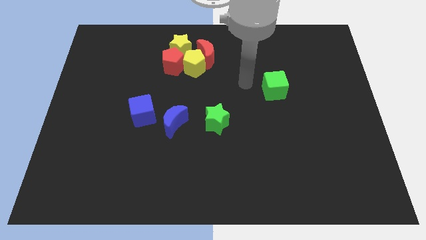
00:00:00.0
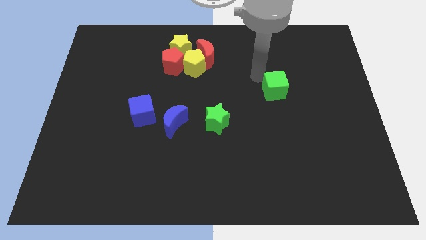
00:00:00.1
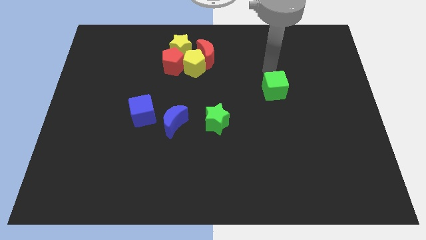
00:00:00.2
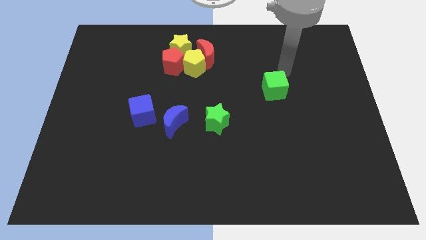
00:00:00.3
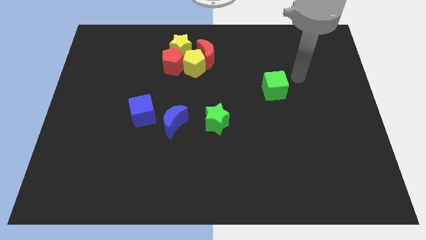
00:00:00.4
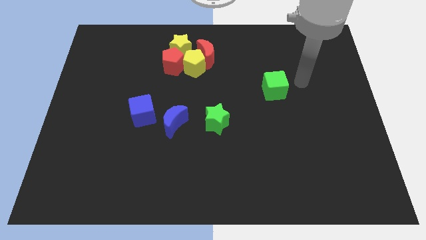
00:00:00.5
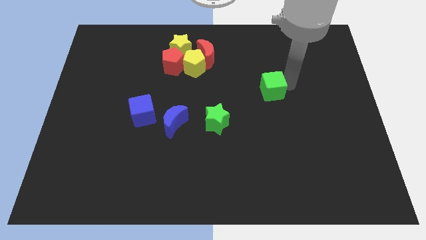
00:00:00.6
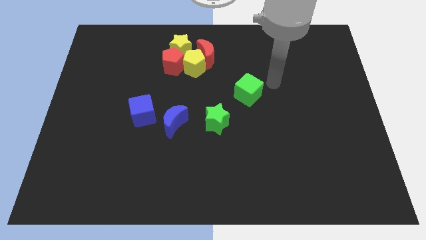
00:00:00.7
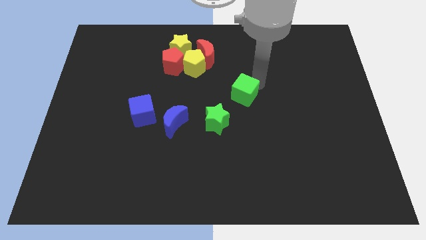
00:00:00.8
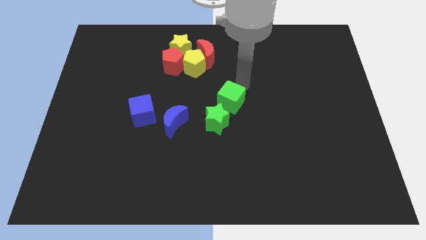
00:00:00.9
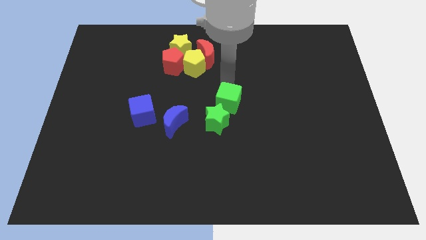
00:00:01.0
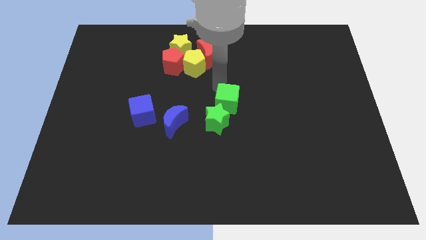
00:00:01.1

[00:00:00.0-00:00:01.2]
move the green cube to the top right to the green star

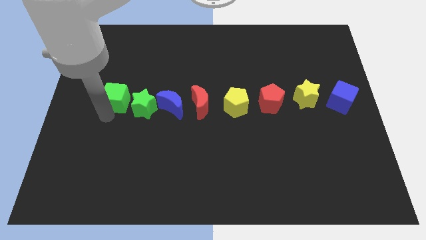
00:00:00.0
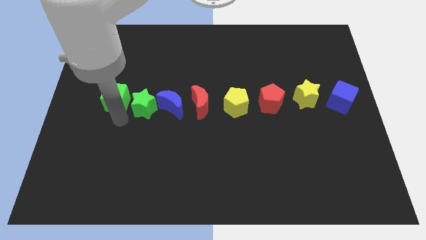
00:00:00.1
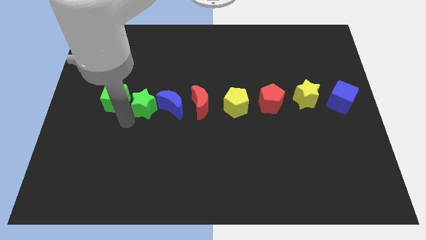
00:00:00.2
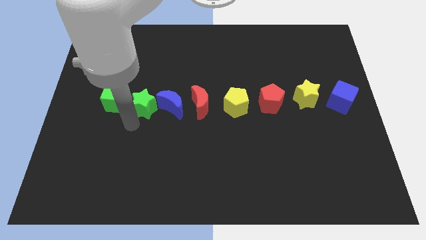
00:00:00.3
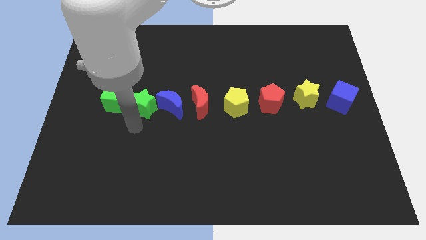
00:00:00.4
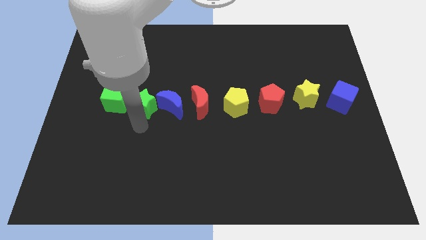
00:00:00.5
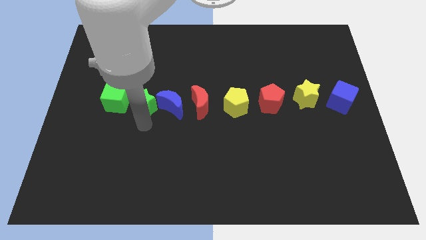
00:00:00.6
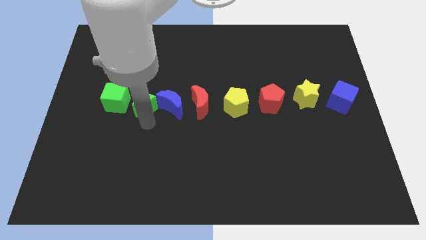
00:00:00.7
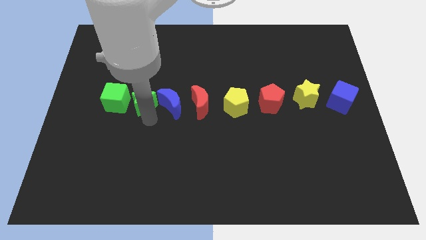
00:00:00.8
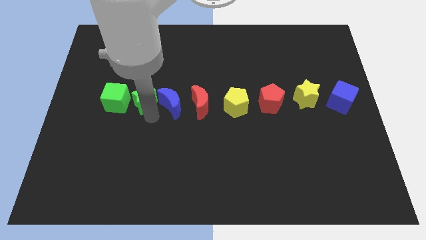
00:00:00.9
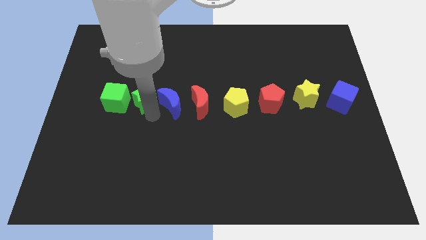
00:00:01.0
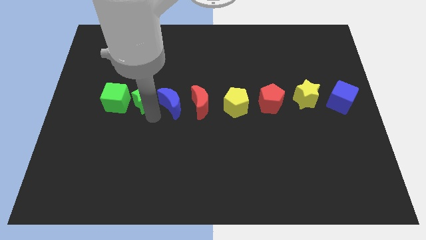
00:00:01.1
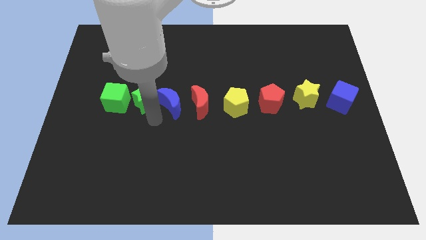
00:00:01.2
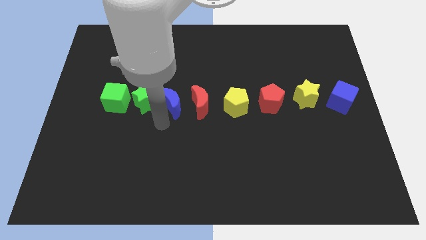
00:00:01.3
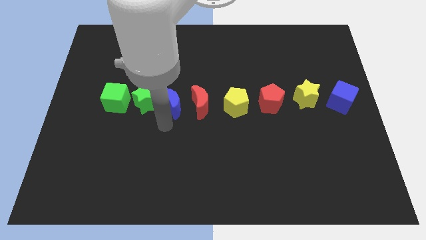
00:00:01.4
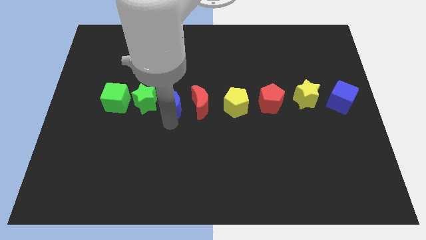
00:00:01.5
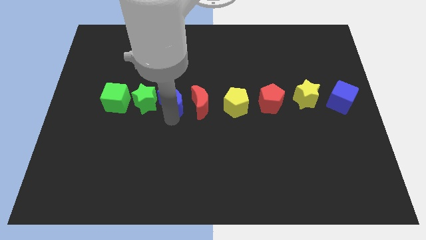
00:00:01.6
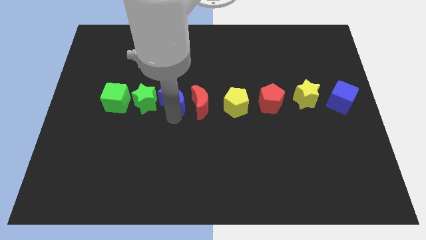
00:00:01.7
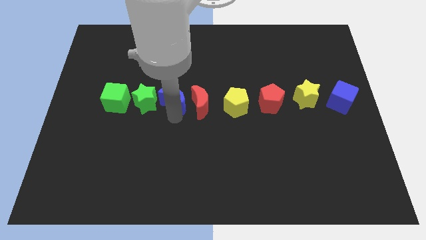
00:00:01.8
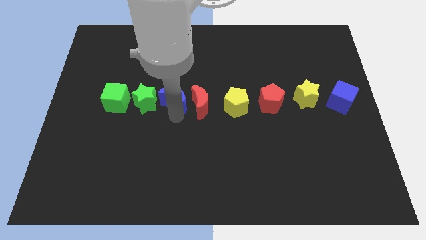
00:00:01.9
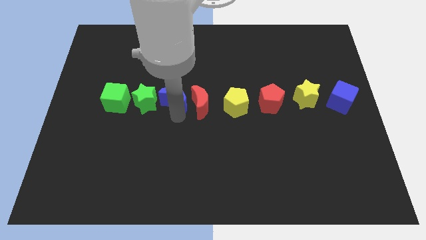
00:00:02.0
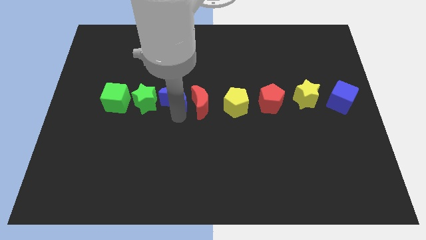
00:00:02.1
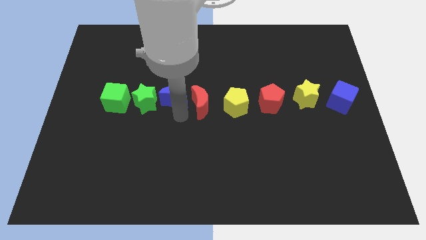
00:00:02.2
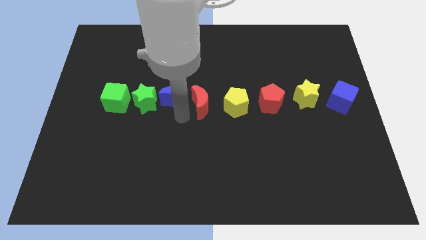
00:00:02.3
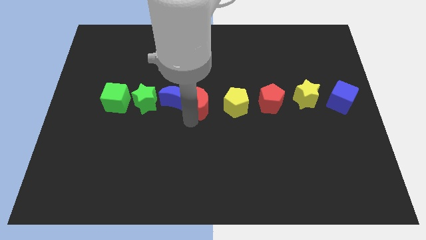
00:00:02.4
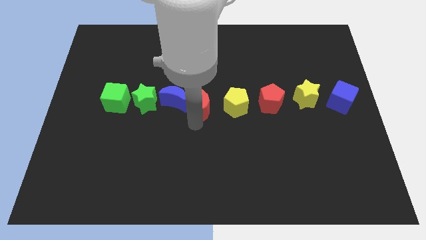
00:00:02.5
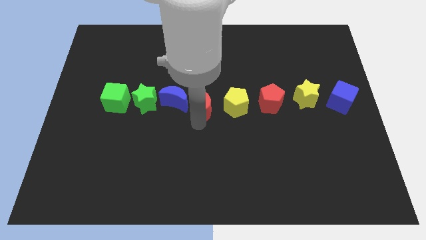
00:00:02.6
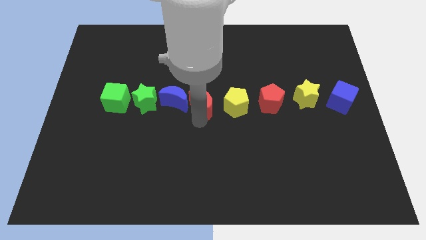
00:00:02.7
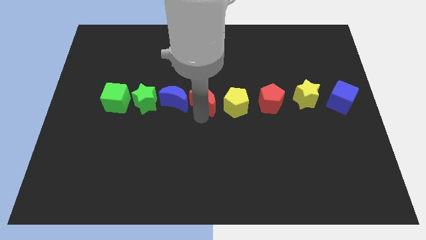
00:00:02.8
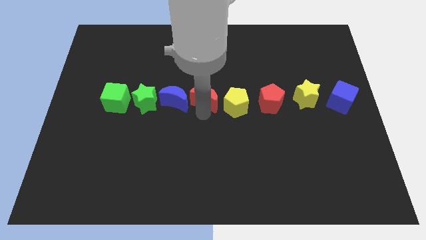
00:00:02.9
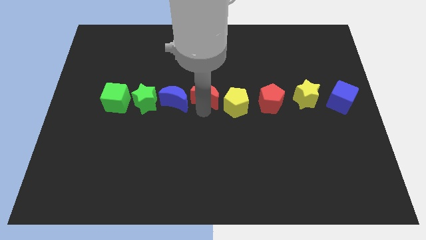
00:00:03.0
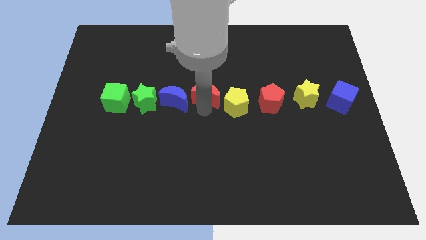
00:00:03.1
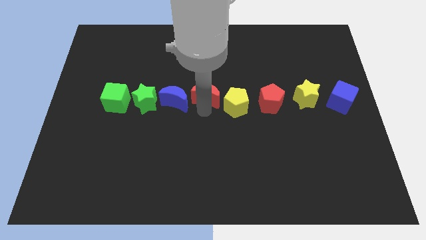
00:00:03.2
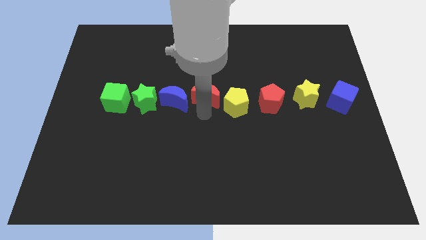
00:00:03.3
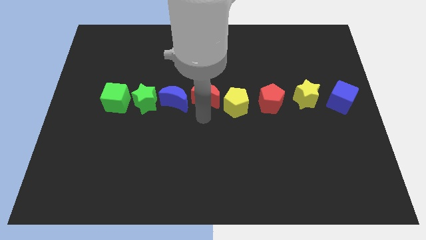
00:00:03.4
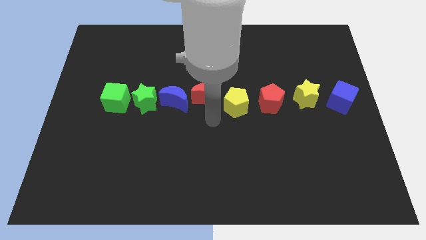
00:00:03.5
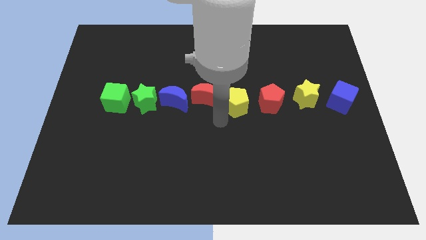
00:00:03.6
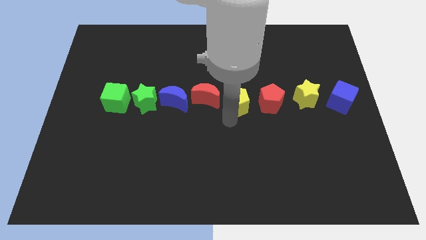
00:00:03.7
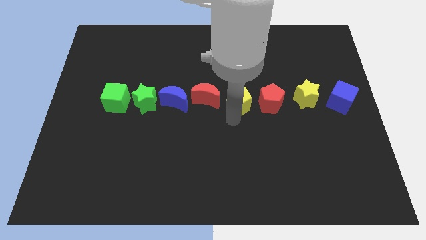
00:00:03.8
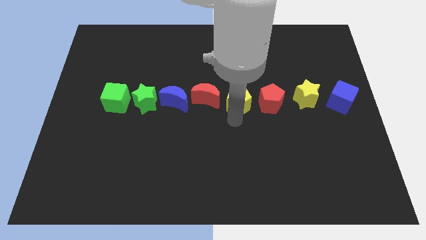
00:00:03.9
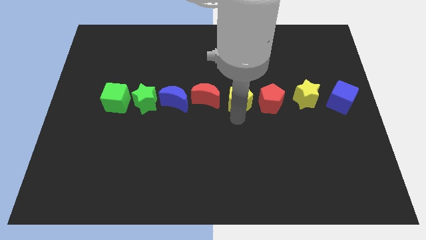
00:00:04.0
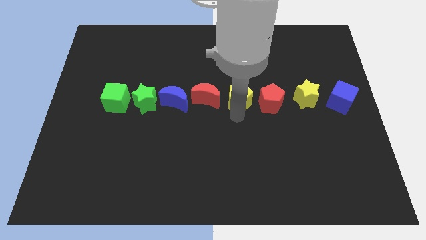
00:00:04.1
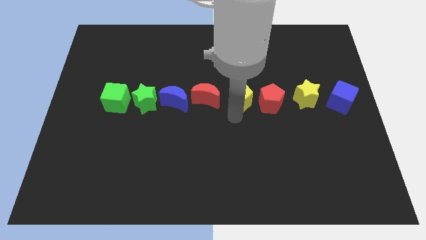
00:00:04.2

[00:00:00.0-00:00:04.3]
adjust the green blocks blue moon red moon and yellow pentagon

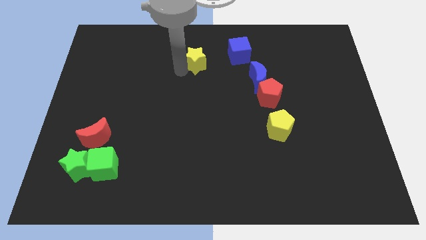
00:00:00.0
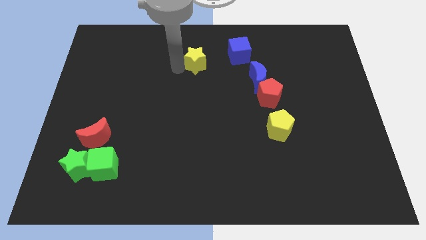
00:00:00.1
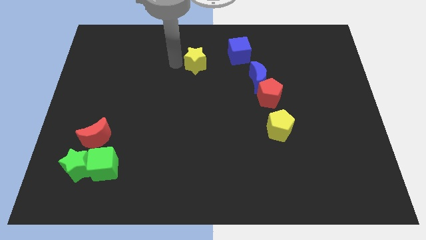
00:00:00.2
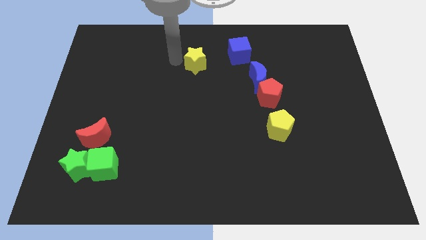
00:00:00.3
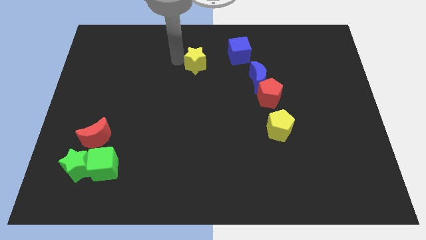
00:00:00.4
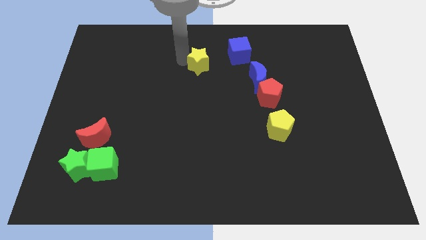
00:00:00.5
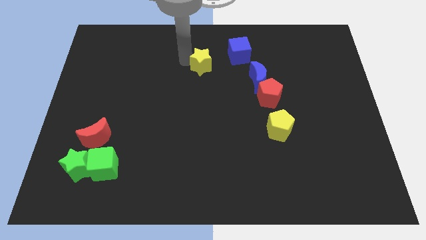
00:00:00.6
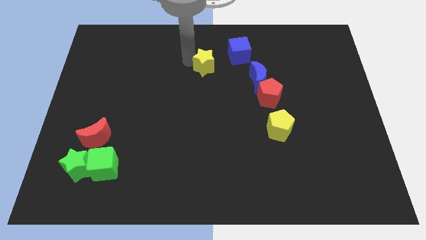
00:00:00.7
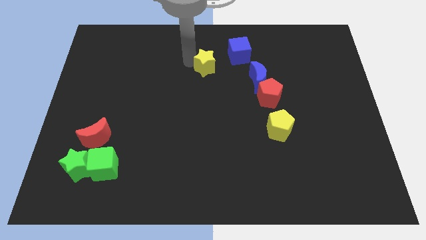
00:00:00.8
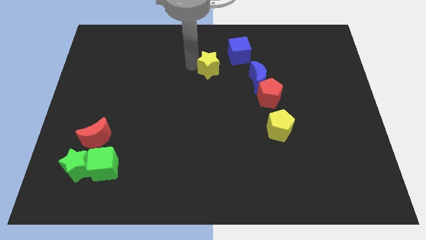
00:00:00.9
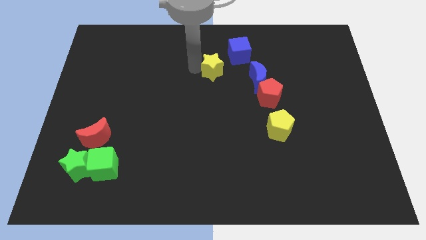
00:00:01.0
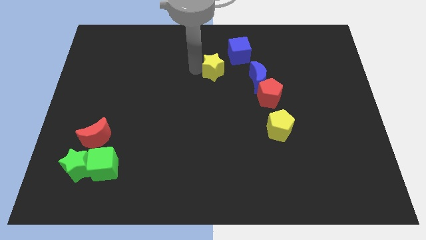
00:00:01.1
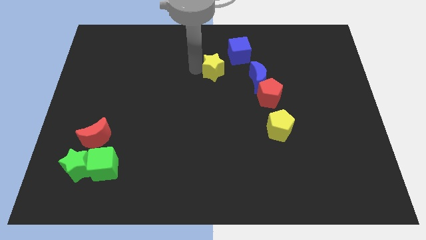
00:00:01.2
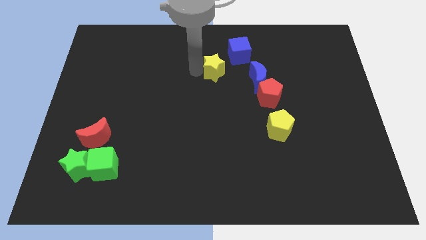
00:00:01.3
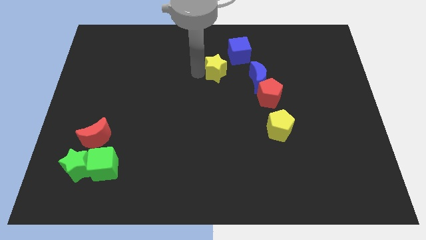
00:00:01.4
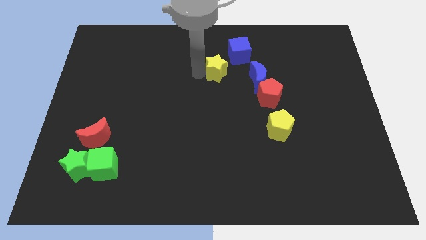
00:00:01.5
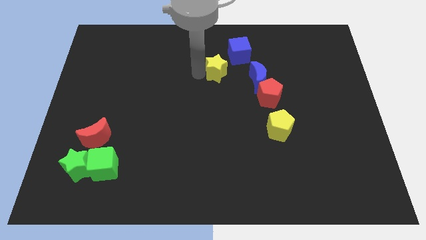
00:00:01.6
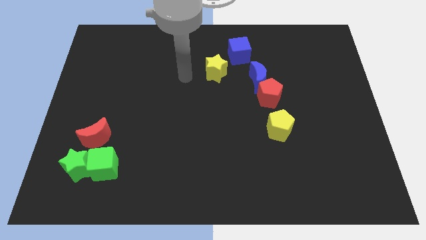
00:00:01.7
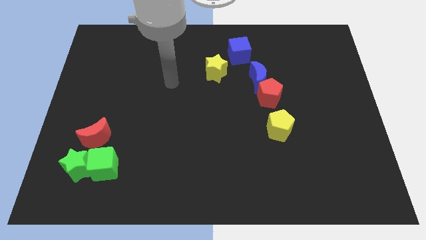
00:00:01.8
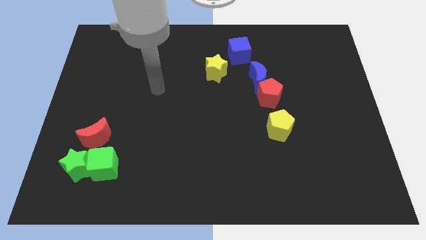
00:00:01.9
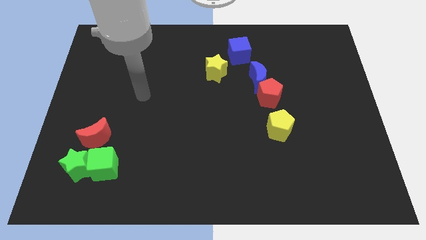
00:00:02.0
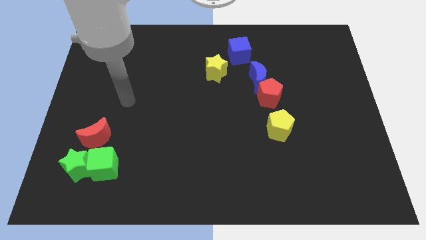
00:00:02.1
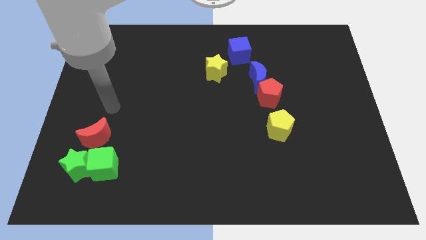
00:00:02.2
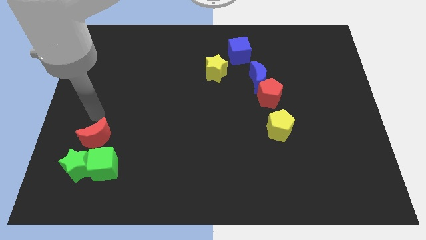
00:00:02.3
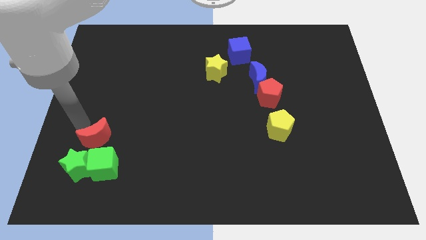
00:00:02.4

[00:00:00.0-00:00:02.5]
place the yellow star to the left bottom of the blue cube

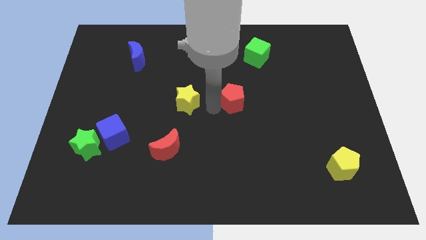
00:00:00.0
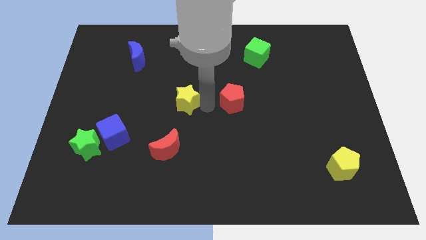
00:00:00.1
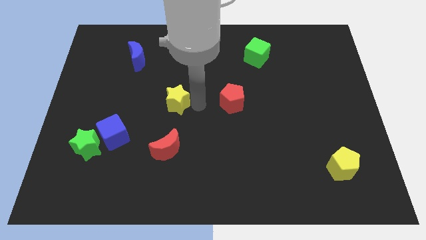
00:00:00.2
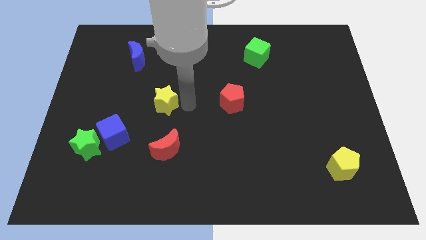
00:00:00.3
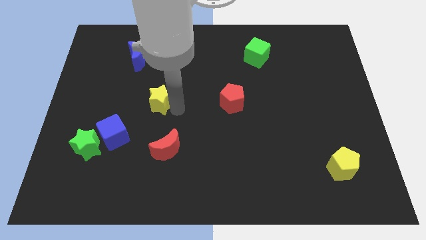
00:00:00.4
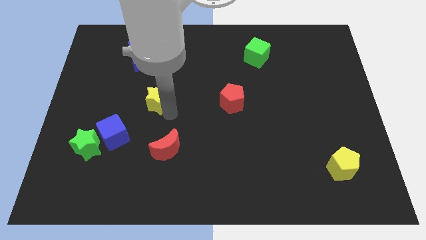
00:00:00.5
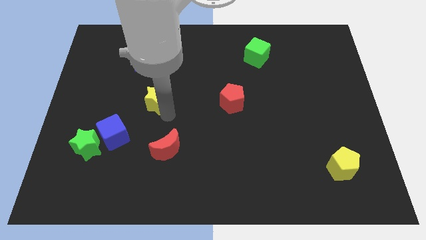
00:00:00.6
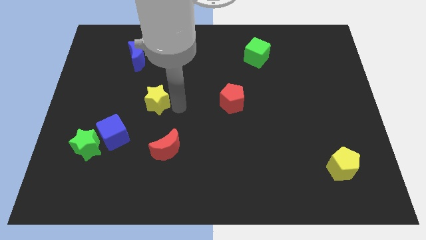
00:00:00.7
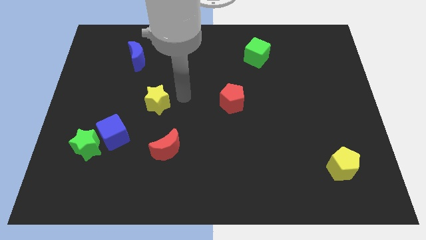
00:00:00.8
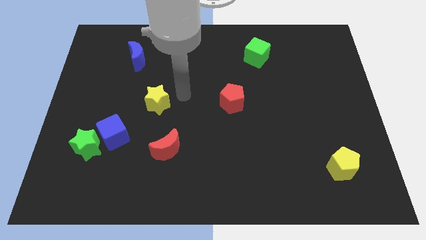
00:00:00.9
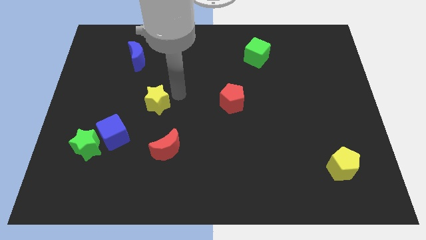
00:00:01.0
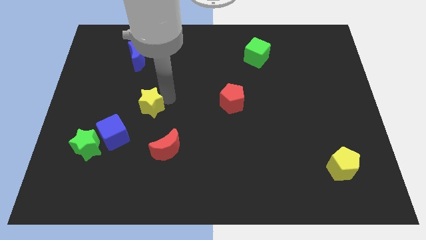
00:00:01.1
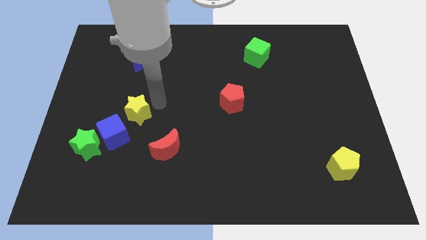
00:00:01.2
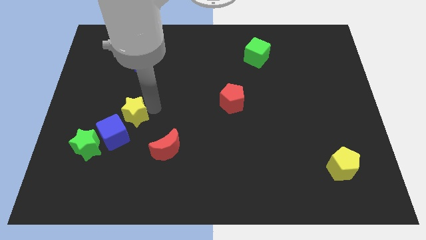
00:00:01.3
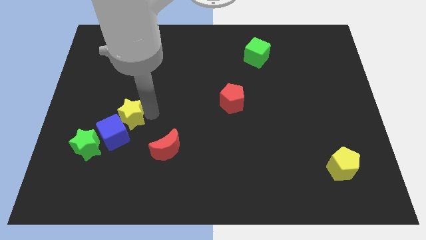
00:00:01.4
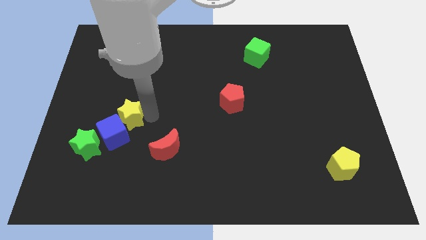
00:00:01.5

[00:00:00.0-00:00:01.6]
push the yellow star into the blue cube
